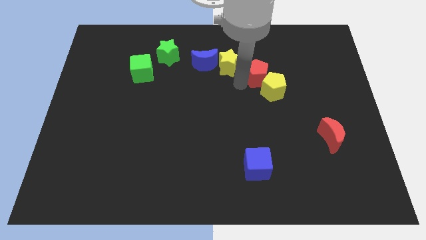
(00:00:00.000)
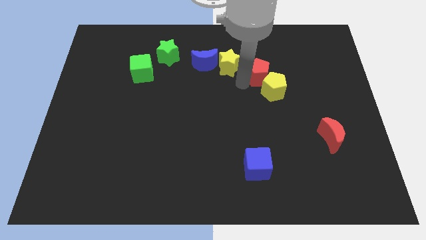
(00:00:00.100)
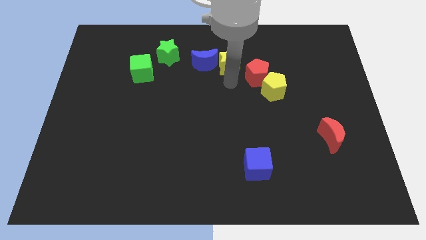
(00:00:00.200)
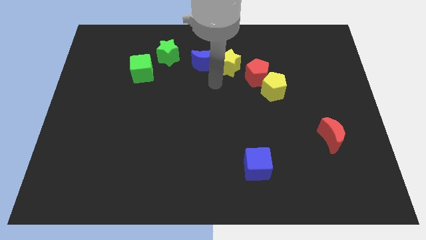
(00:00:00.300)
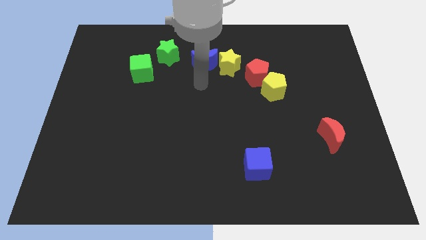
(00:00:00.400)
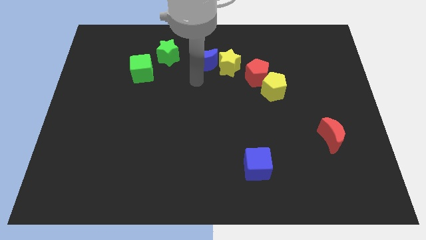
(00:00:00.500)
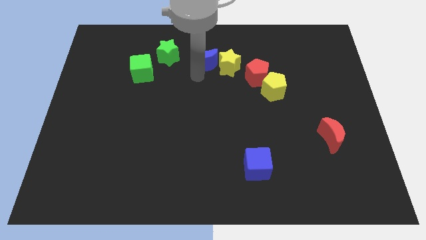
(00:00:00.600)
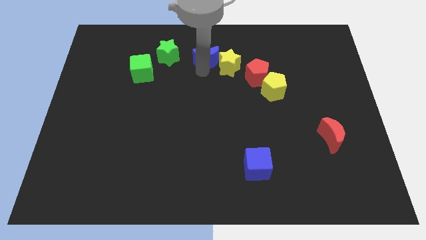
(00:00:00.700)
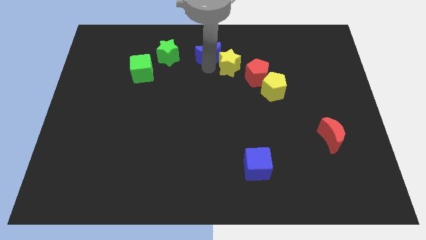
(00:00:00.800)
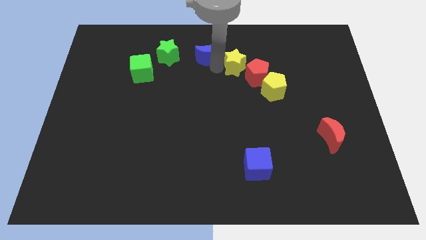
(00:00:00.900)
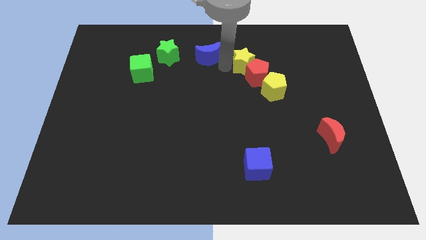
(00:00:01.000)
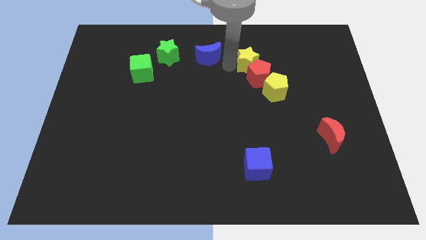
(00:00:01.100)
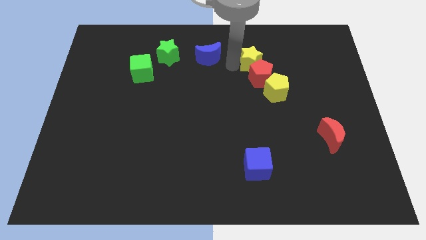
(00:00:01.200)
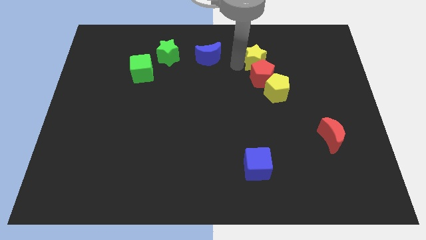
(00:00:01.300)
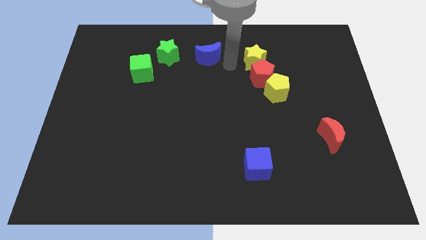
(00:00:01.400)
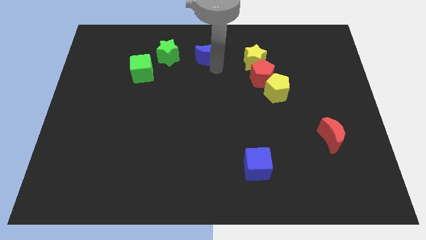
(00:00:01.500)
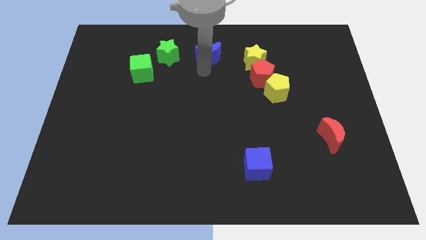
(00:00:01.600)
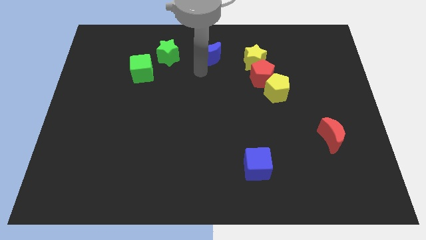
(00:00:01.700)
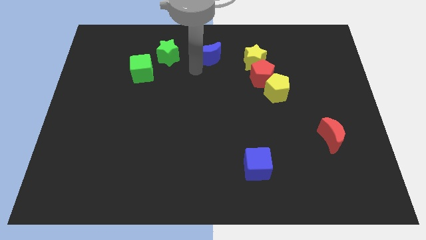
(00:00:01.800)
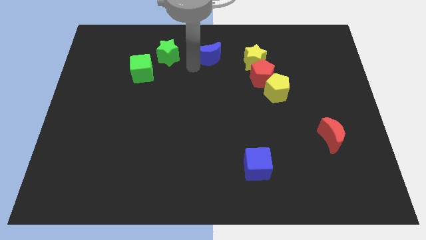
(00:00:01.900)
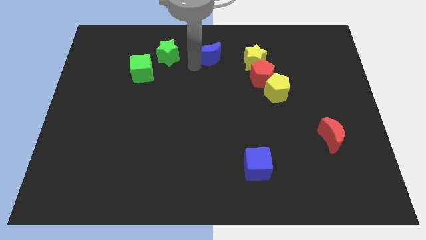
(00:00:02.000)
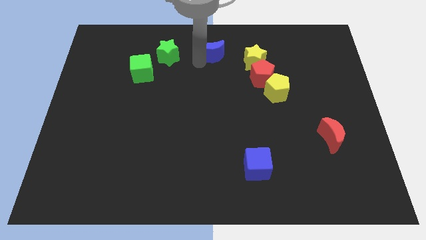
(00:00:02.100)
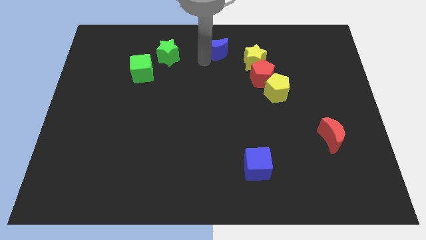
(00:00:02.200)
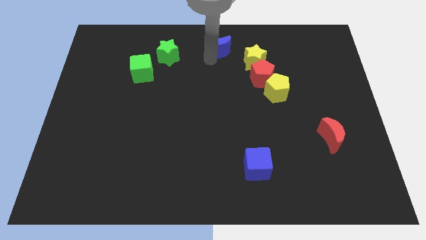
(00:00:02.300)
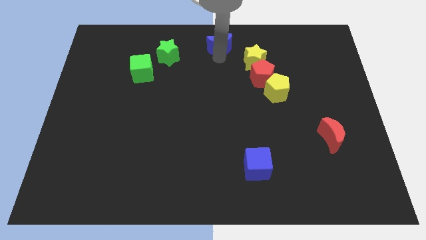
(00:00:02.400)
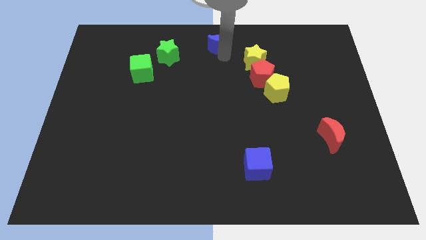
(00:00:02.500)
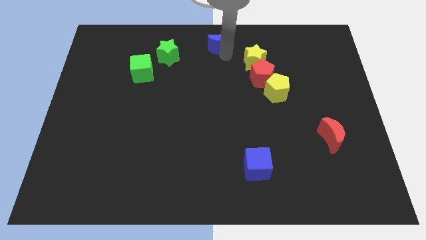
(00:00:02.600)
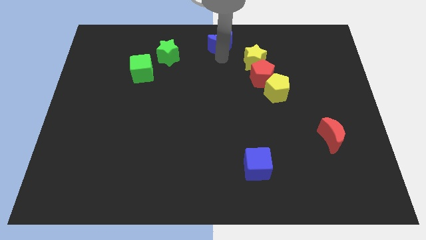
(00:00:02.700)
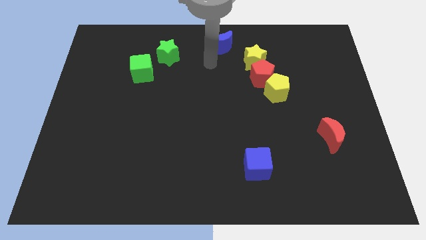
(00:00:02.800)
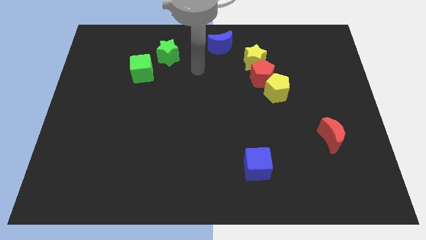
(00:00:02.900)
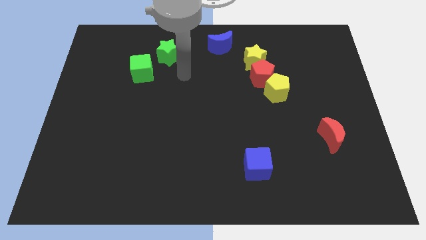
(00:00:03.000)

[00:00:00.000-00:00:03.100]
push blue crescent slightly upwards

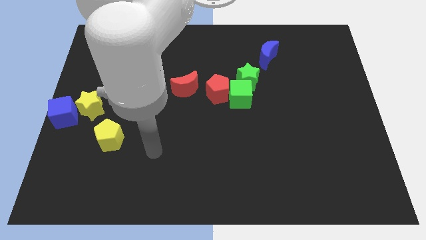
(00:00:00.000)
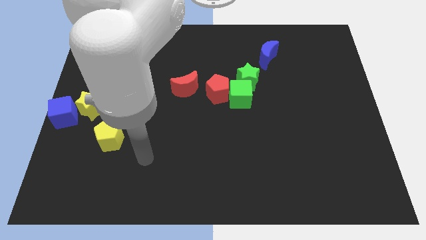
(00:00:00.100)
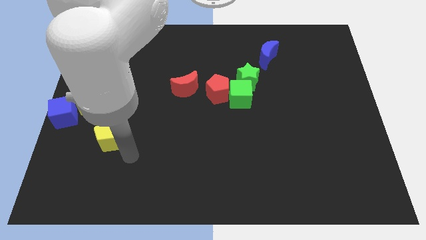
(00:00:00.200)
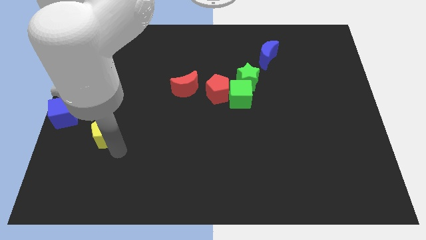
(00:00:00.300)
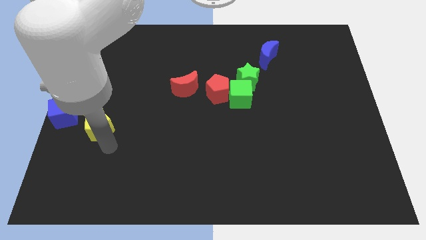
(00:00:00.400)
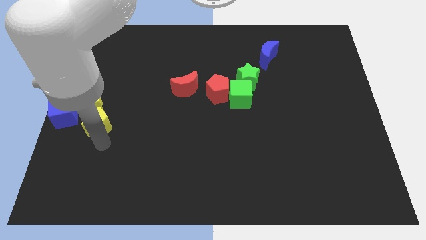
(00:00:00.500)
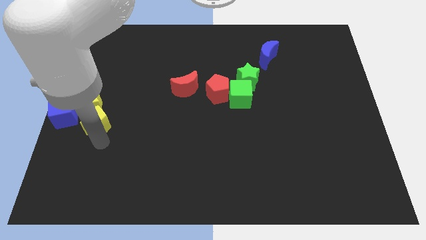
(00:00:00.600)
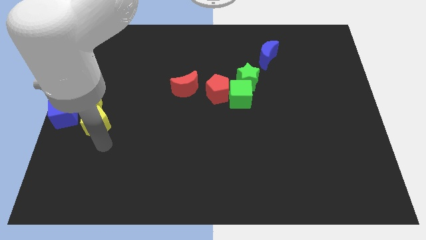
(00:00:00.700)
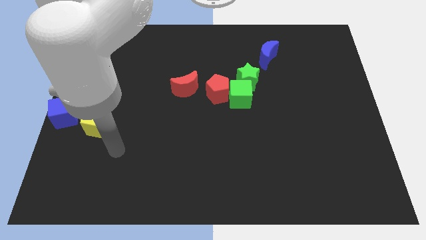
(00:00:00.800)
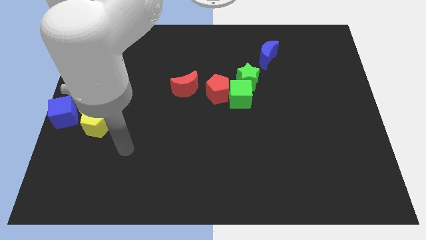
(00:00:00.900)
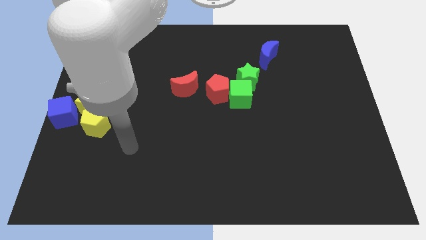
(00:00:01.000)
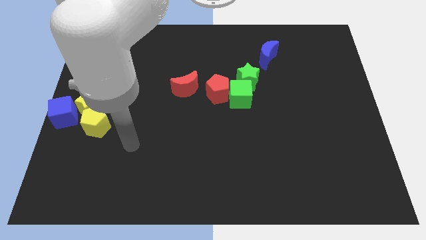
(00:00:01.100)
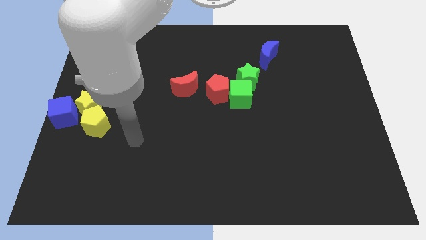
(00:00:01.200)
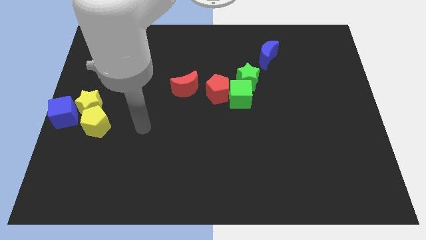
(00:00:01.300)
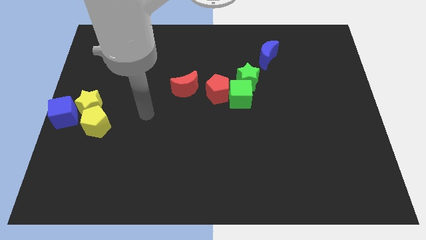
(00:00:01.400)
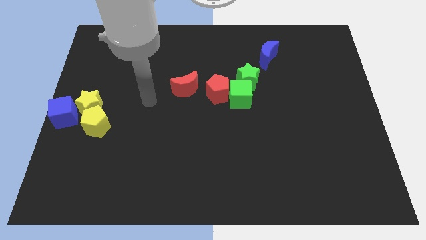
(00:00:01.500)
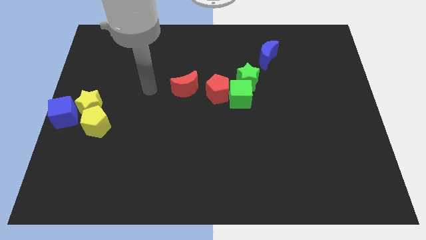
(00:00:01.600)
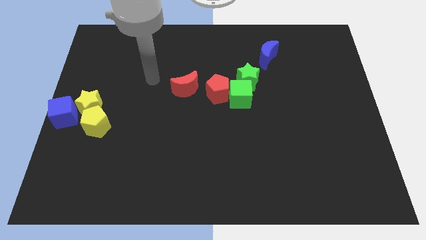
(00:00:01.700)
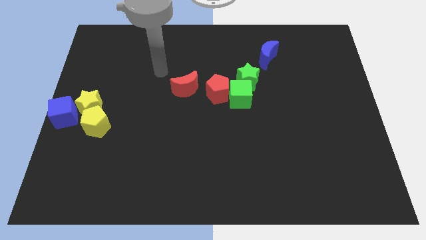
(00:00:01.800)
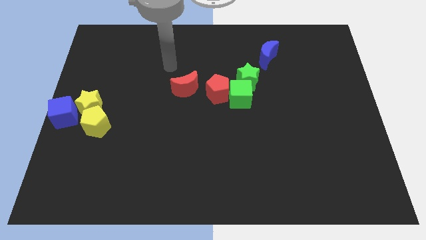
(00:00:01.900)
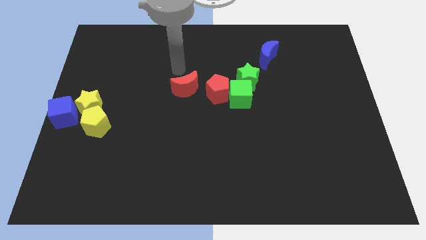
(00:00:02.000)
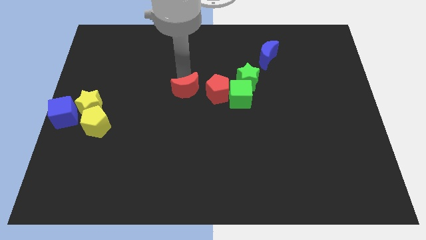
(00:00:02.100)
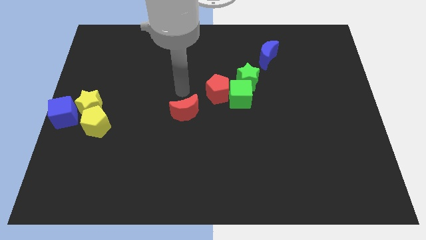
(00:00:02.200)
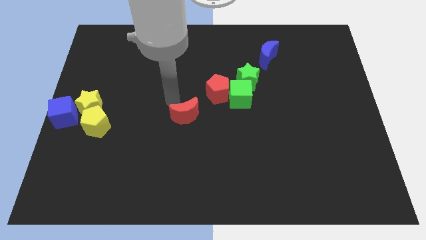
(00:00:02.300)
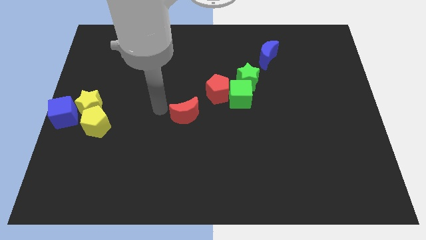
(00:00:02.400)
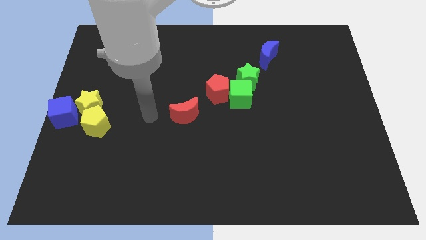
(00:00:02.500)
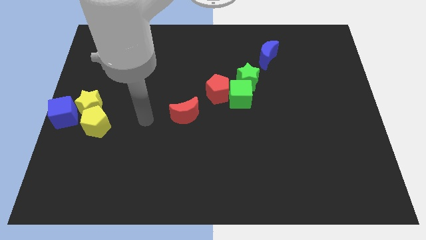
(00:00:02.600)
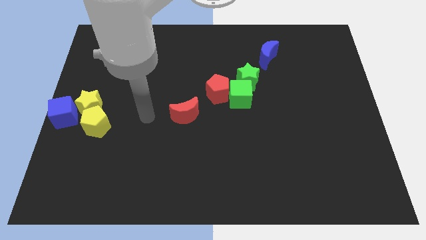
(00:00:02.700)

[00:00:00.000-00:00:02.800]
move the red crescent to the centre of the board

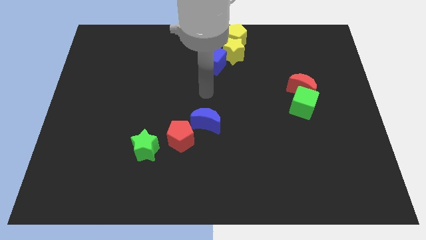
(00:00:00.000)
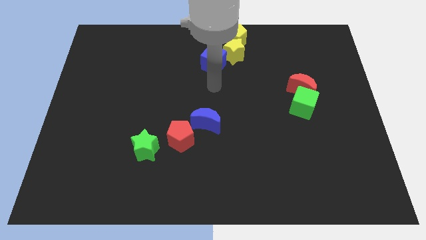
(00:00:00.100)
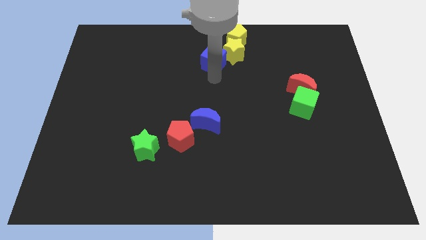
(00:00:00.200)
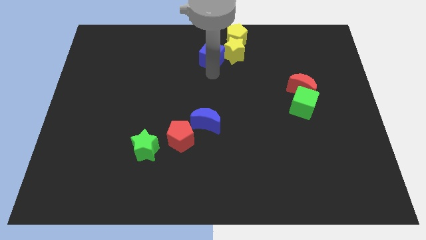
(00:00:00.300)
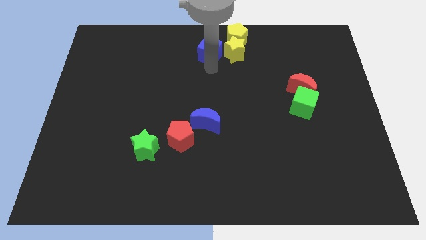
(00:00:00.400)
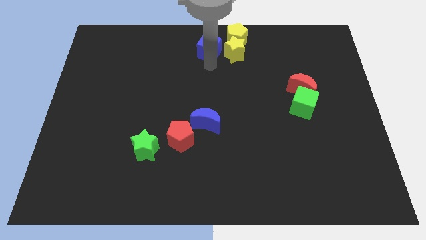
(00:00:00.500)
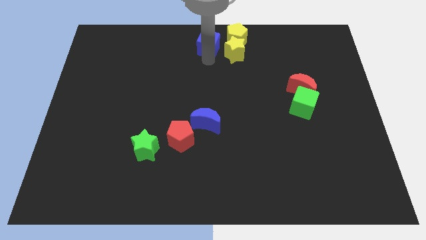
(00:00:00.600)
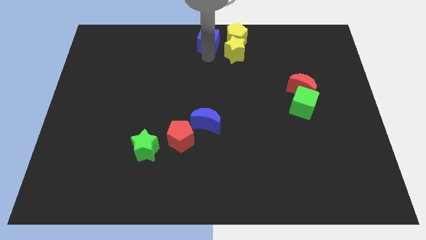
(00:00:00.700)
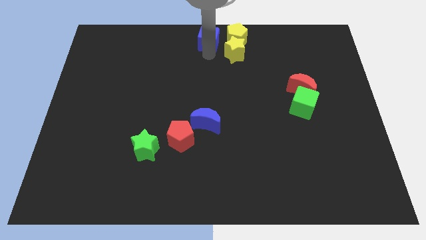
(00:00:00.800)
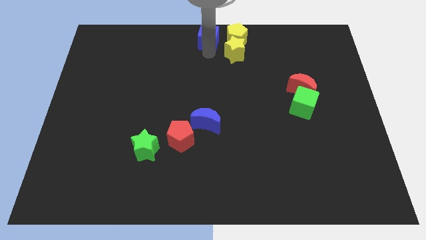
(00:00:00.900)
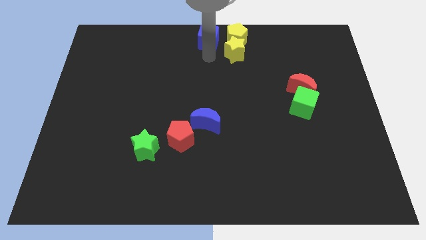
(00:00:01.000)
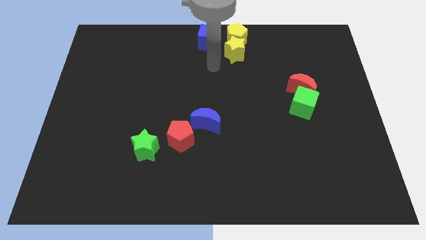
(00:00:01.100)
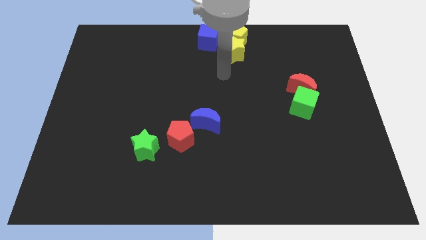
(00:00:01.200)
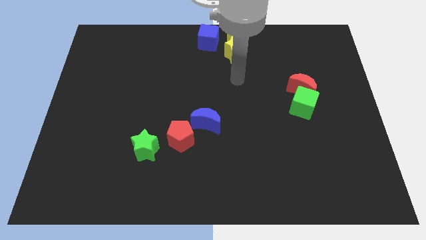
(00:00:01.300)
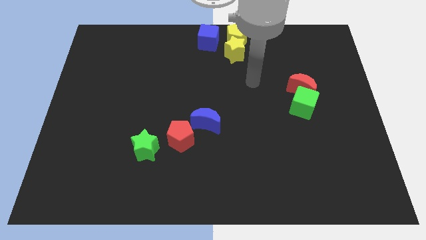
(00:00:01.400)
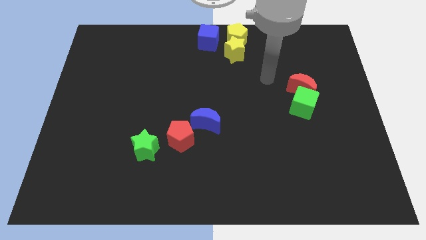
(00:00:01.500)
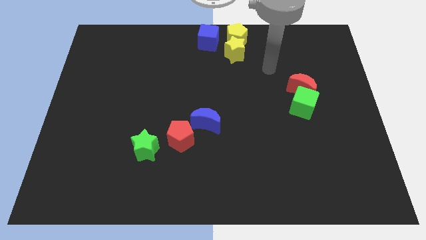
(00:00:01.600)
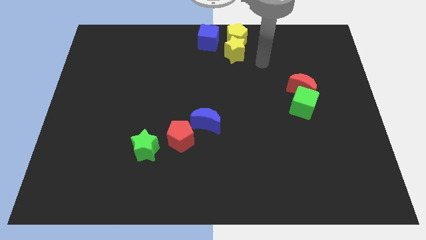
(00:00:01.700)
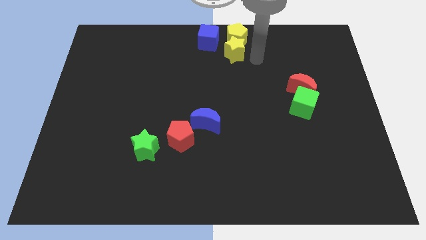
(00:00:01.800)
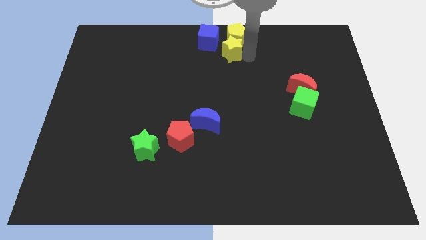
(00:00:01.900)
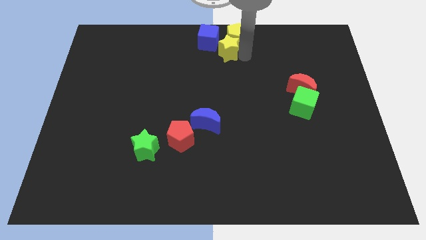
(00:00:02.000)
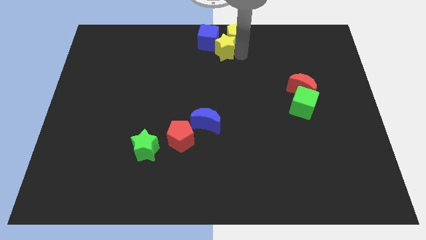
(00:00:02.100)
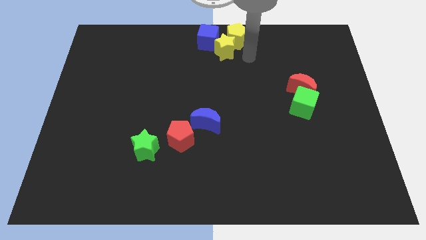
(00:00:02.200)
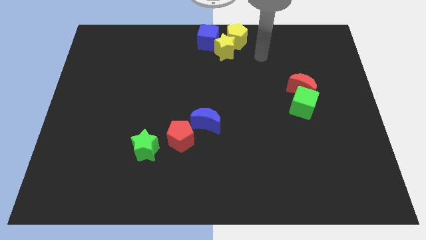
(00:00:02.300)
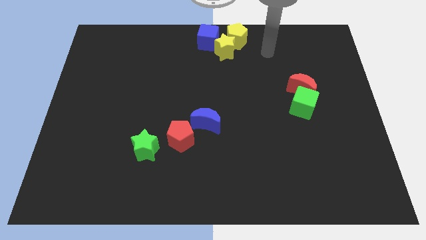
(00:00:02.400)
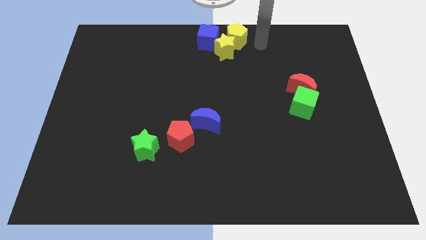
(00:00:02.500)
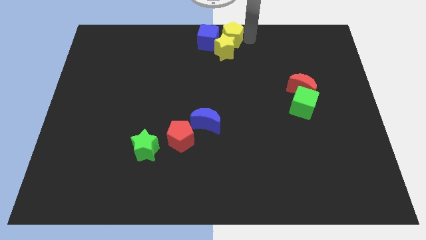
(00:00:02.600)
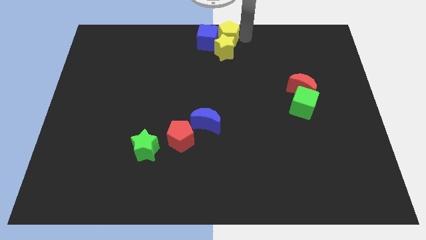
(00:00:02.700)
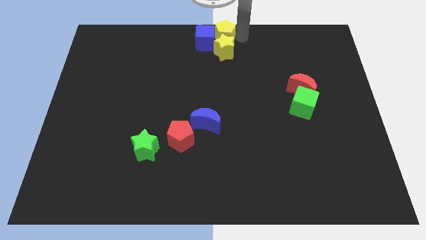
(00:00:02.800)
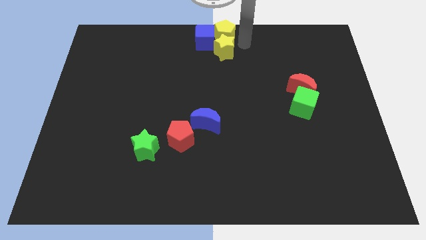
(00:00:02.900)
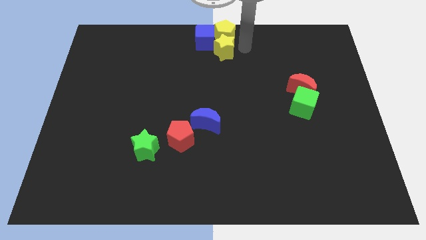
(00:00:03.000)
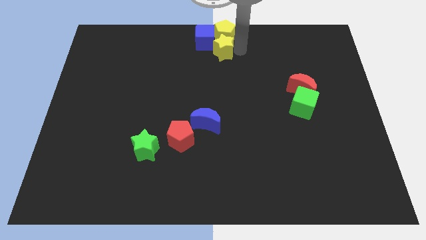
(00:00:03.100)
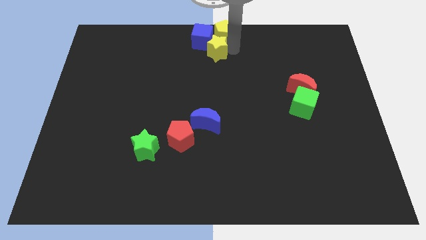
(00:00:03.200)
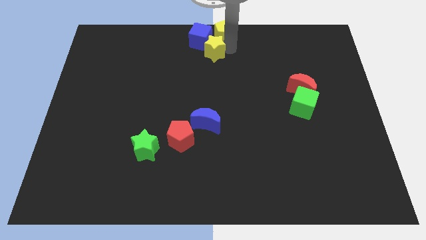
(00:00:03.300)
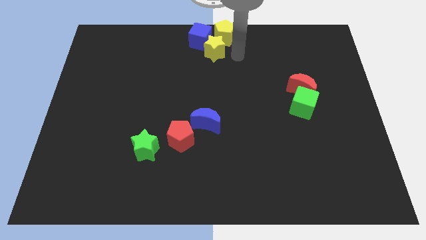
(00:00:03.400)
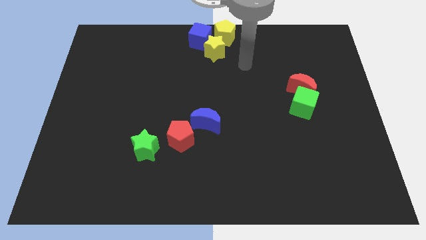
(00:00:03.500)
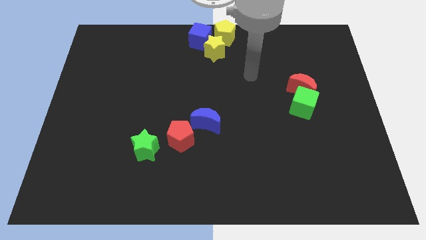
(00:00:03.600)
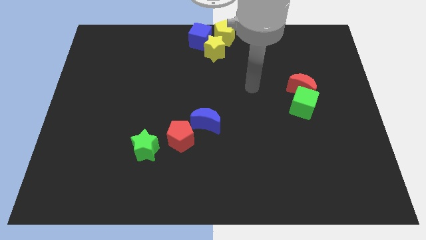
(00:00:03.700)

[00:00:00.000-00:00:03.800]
adjust the group of blocks at the top center of the table
